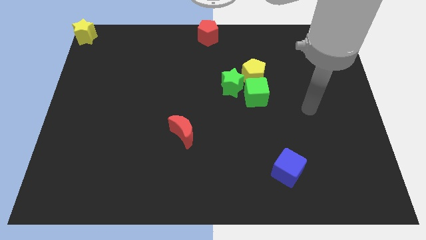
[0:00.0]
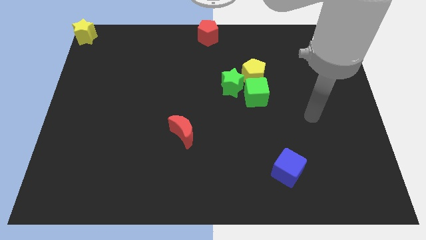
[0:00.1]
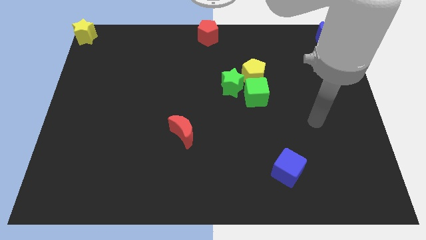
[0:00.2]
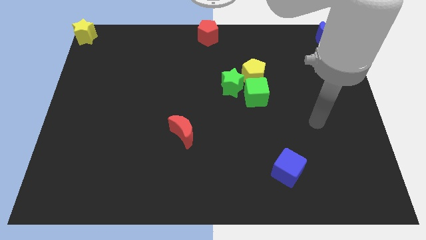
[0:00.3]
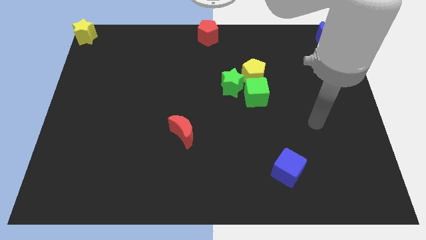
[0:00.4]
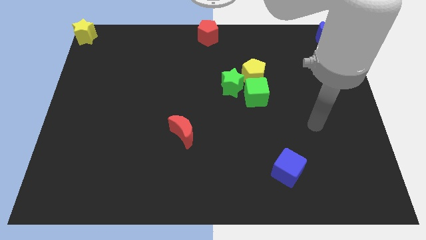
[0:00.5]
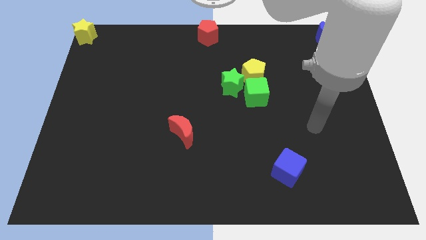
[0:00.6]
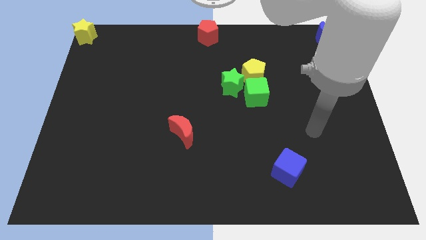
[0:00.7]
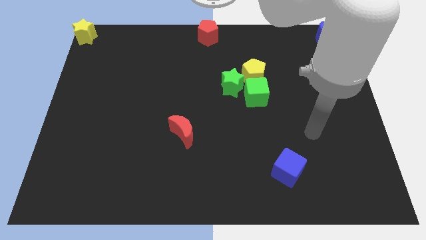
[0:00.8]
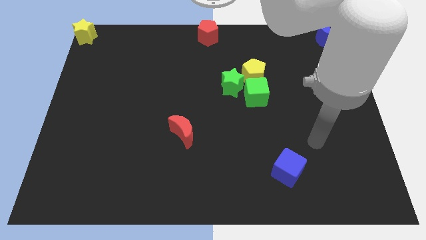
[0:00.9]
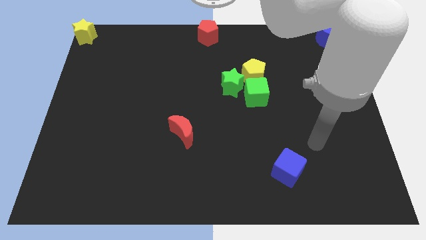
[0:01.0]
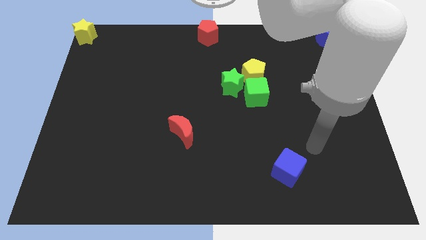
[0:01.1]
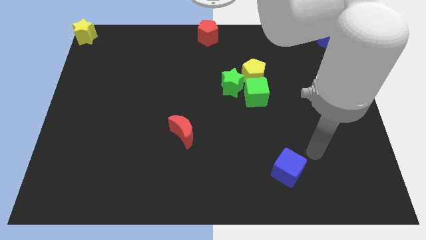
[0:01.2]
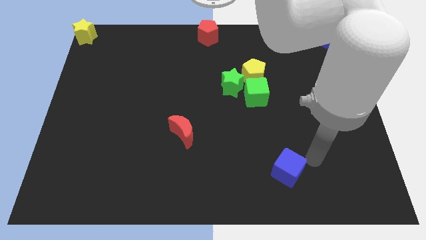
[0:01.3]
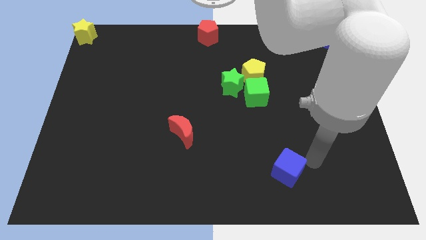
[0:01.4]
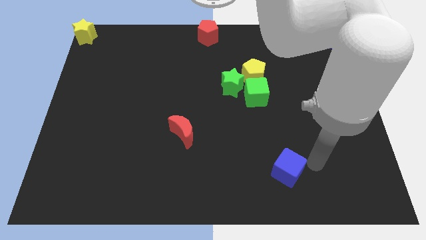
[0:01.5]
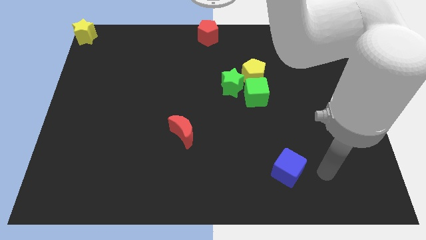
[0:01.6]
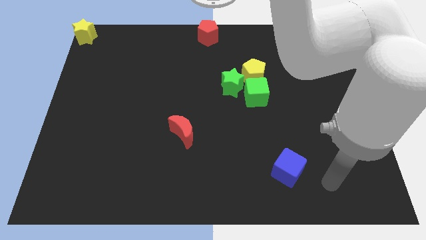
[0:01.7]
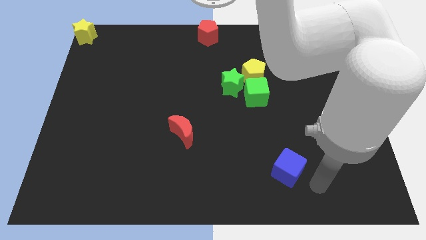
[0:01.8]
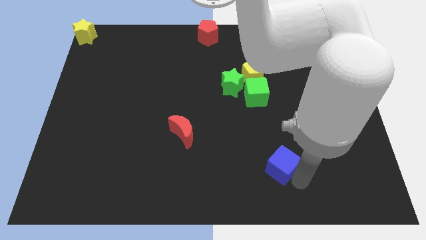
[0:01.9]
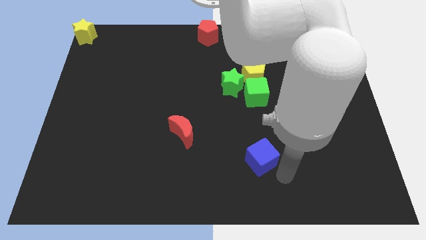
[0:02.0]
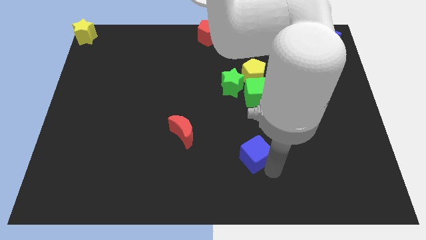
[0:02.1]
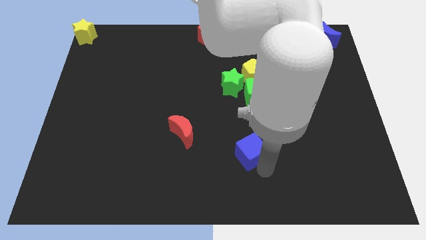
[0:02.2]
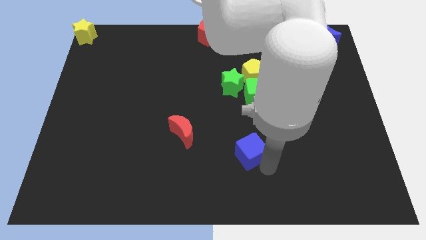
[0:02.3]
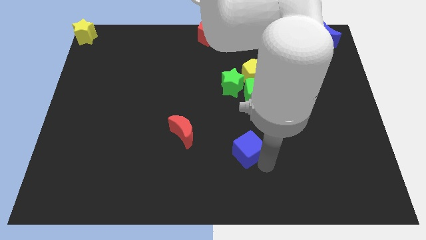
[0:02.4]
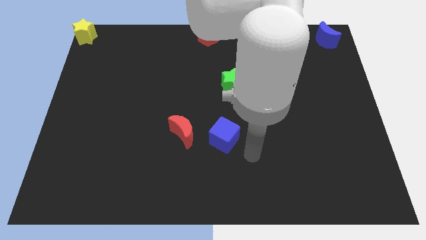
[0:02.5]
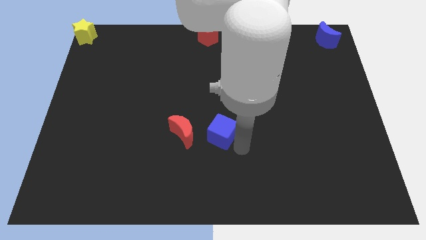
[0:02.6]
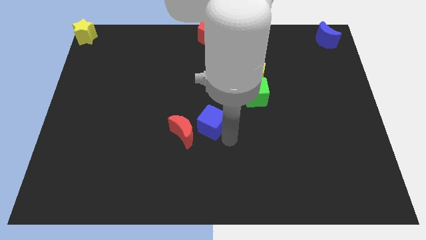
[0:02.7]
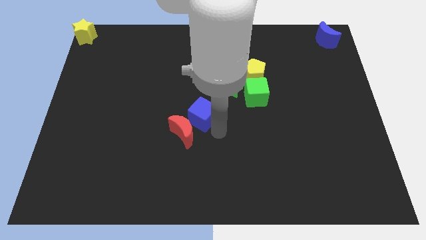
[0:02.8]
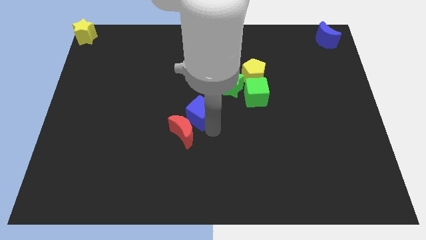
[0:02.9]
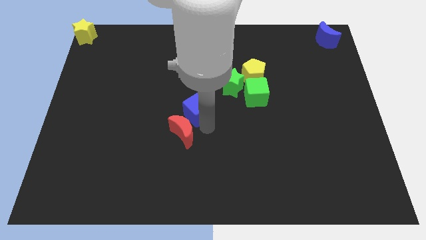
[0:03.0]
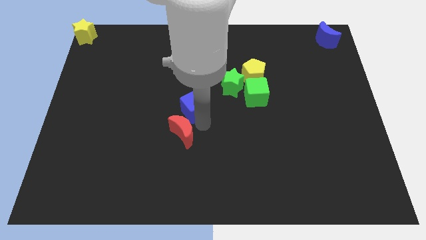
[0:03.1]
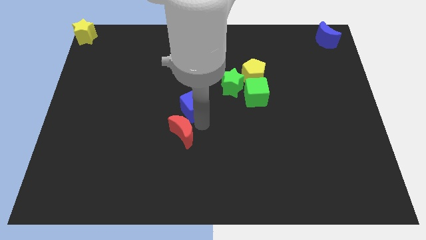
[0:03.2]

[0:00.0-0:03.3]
put the blue cube diagonally bottom left to the green cube

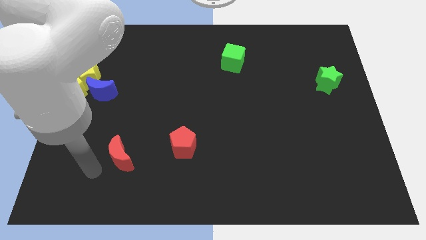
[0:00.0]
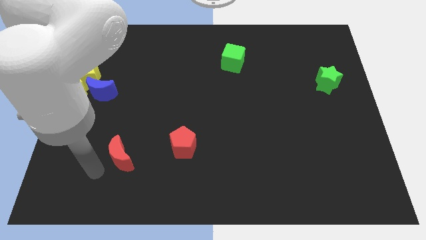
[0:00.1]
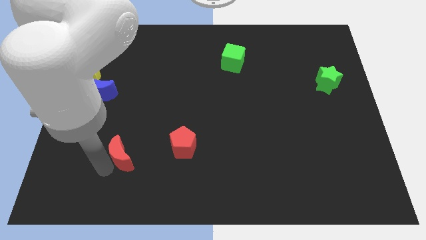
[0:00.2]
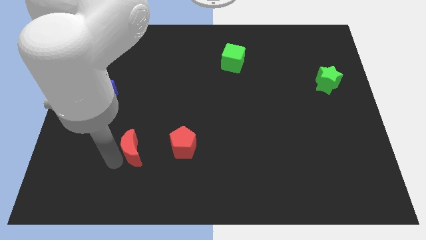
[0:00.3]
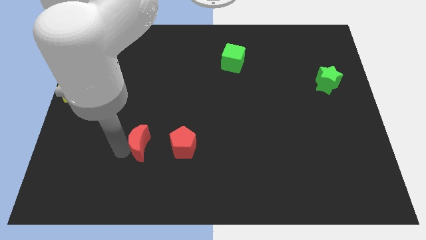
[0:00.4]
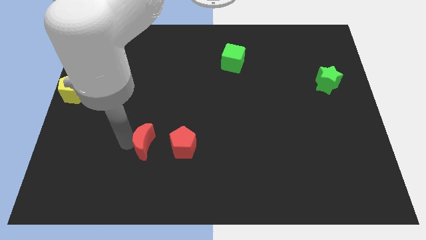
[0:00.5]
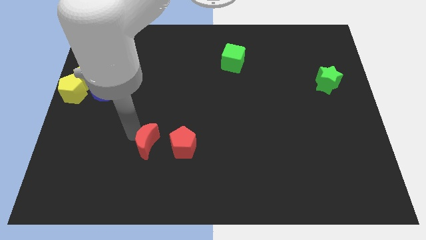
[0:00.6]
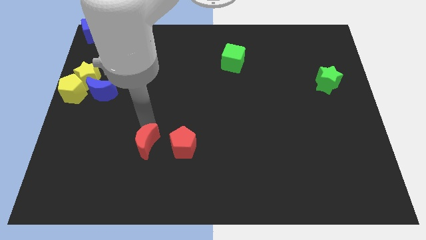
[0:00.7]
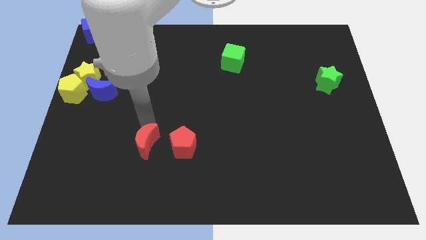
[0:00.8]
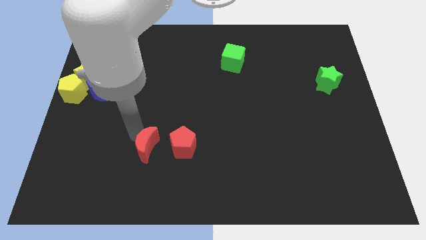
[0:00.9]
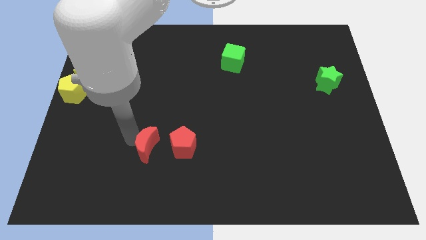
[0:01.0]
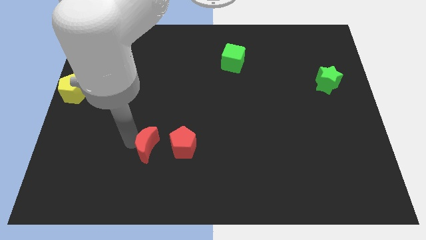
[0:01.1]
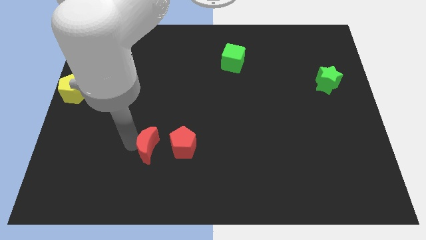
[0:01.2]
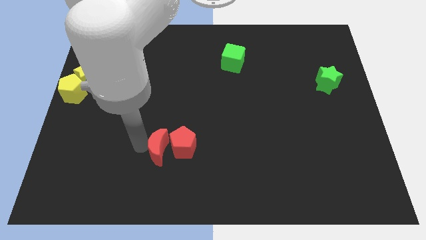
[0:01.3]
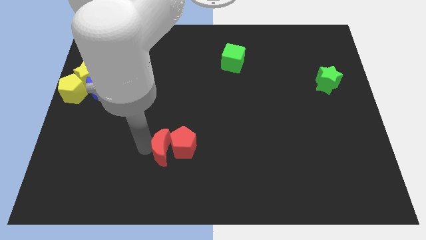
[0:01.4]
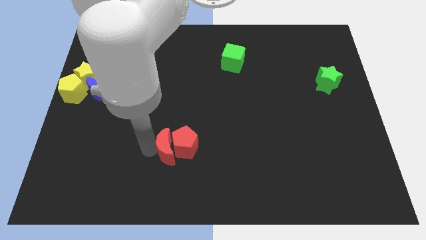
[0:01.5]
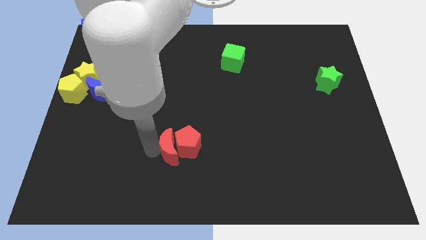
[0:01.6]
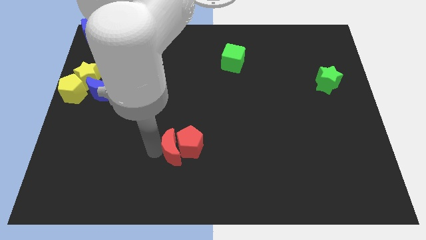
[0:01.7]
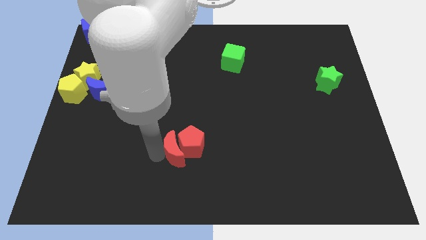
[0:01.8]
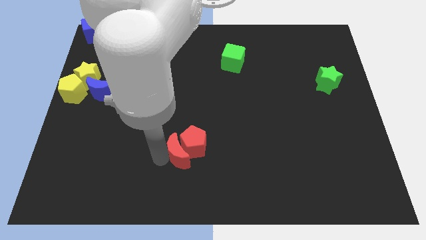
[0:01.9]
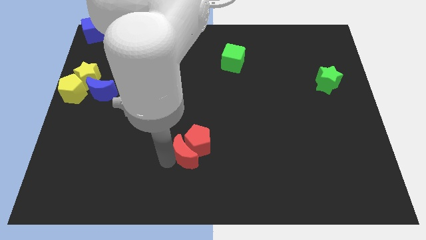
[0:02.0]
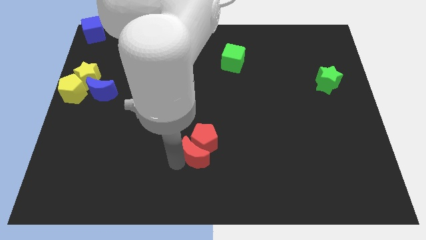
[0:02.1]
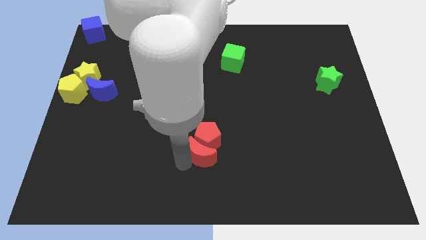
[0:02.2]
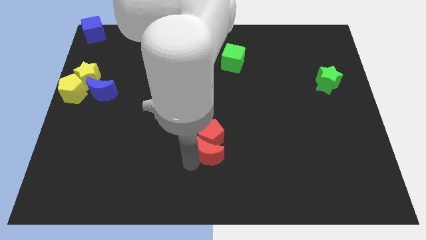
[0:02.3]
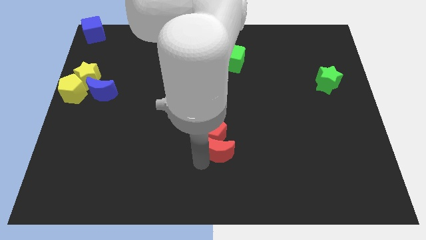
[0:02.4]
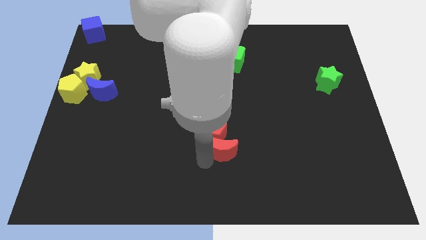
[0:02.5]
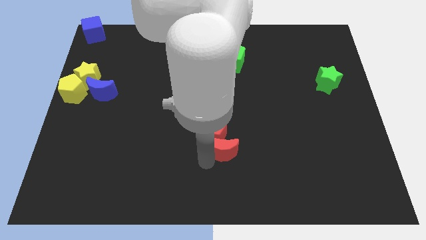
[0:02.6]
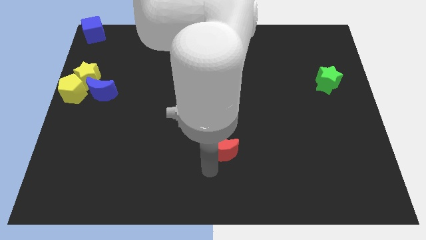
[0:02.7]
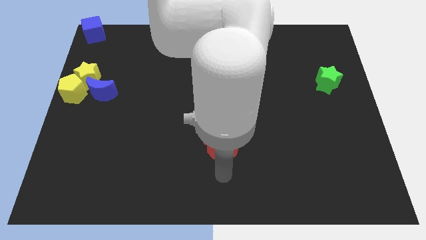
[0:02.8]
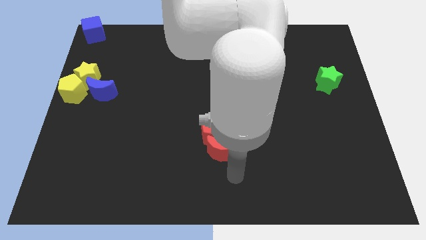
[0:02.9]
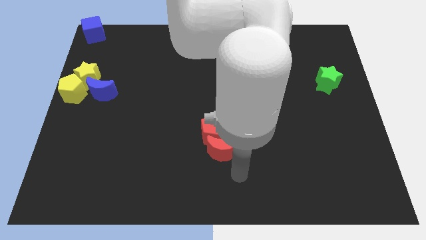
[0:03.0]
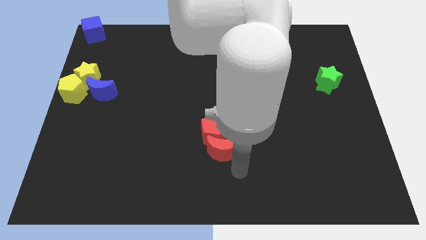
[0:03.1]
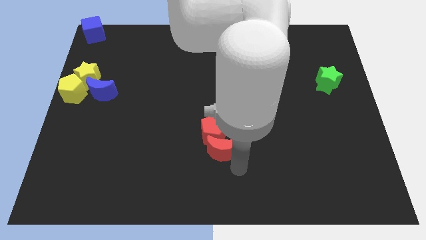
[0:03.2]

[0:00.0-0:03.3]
push the red moon and red pentagon together towards the center

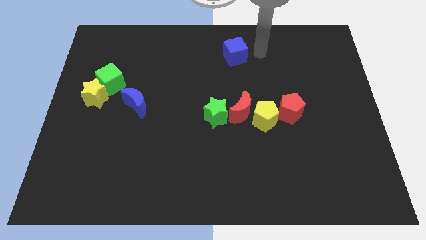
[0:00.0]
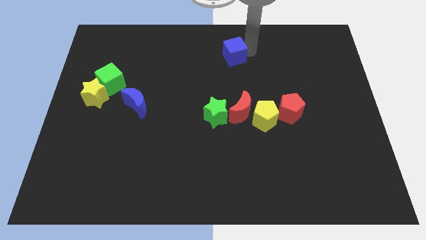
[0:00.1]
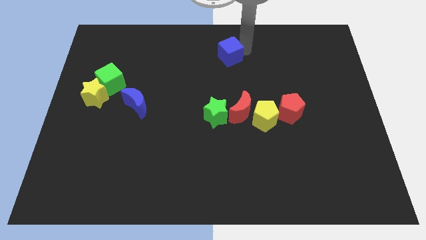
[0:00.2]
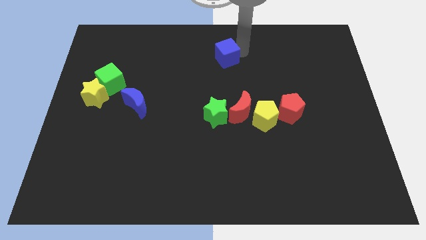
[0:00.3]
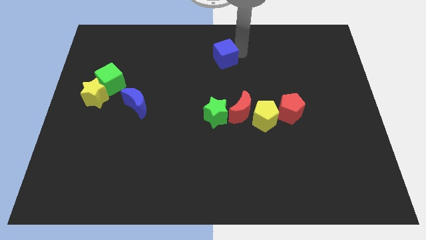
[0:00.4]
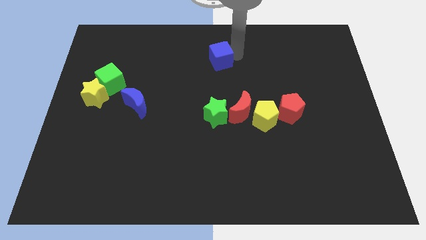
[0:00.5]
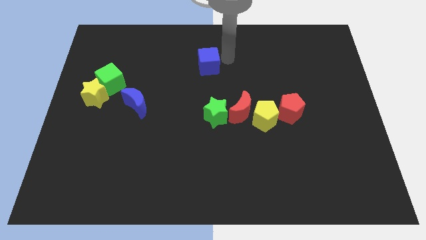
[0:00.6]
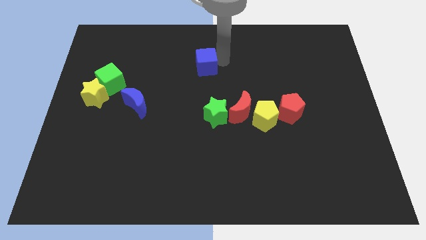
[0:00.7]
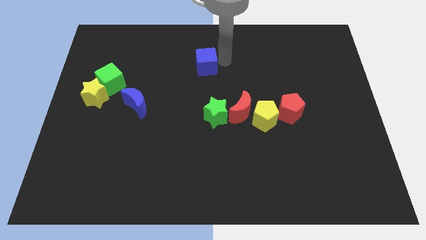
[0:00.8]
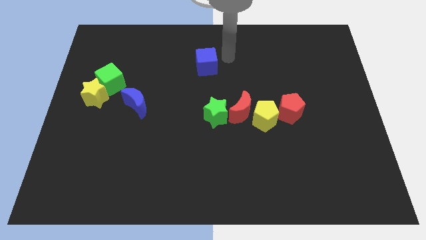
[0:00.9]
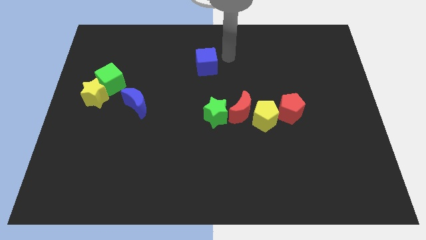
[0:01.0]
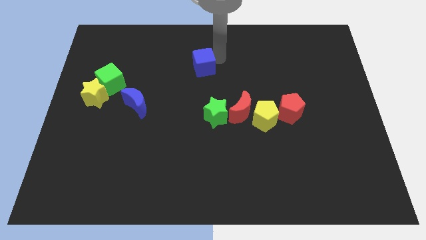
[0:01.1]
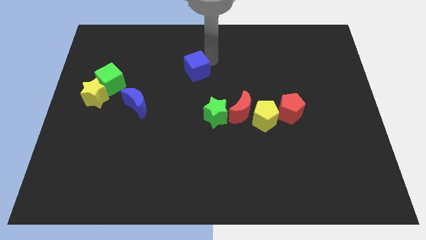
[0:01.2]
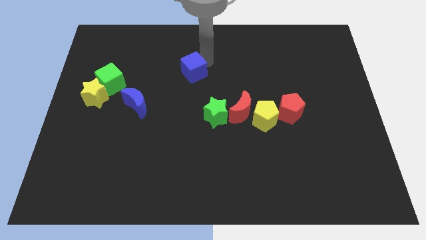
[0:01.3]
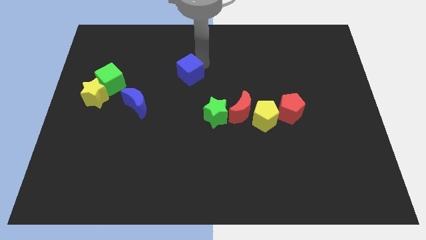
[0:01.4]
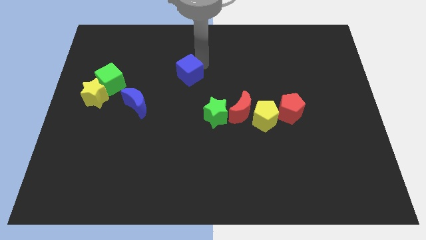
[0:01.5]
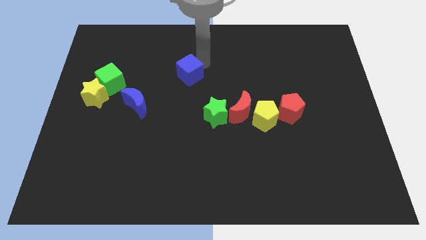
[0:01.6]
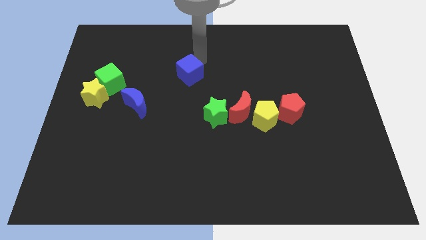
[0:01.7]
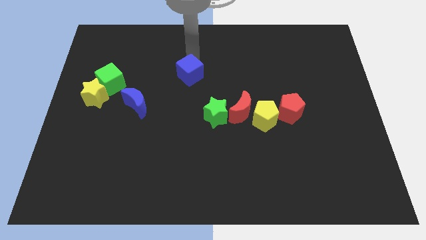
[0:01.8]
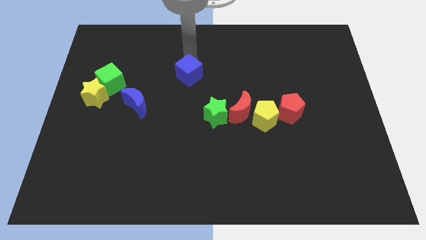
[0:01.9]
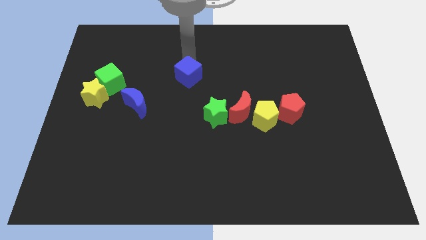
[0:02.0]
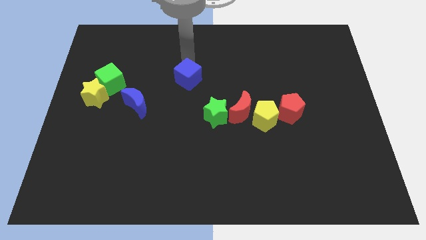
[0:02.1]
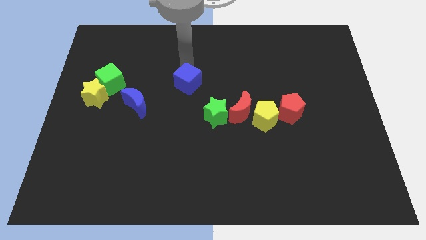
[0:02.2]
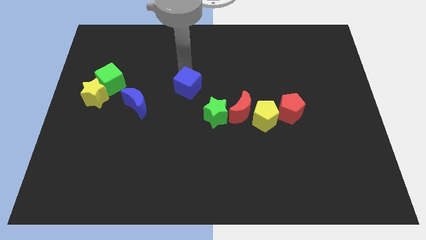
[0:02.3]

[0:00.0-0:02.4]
place the blue cube towards the blue crescent
